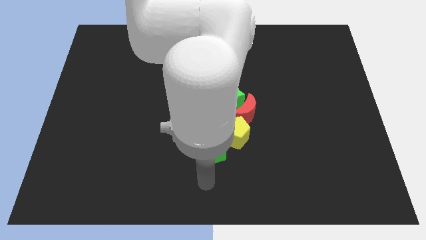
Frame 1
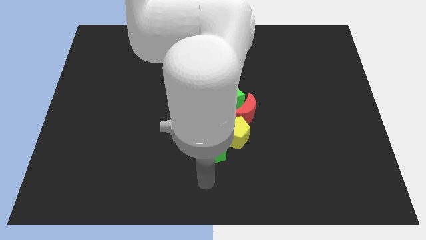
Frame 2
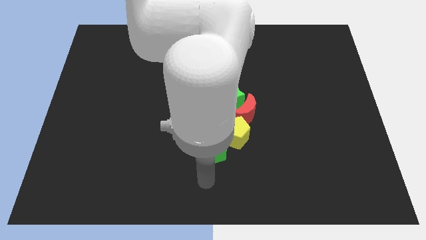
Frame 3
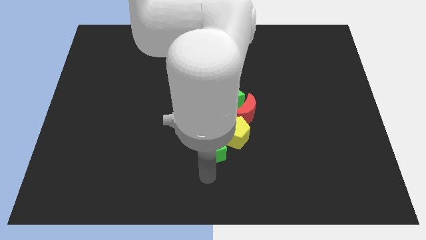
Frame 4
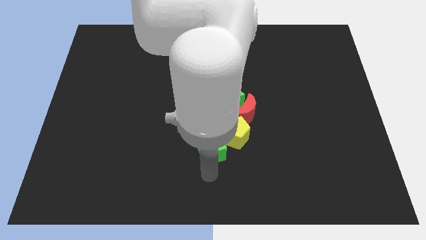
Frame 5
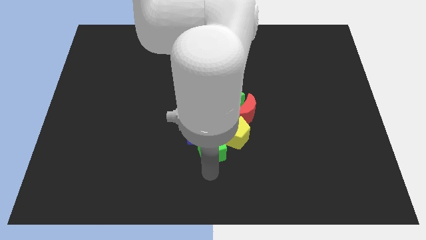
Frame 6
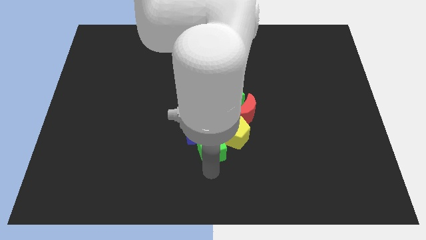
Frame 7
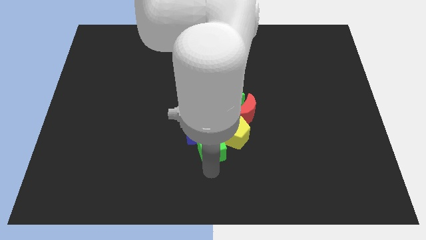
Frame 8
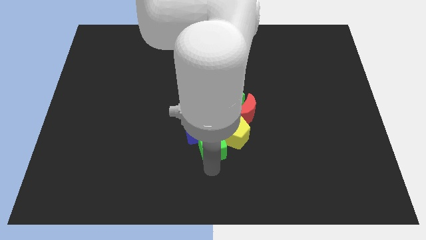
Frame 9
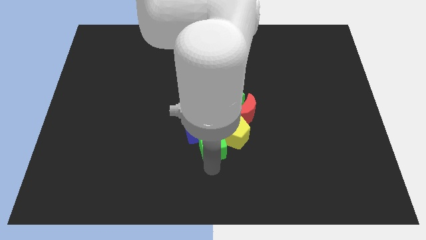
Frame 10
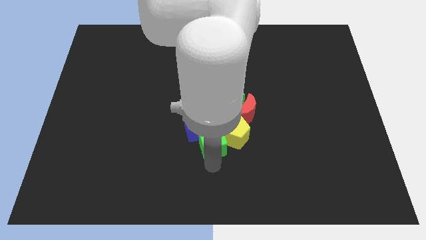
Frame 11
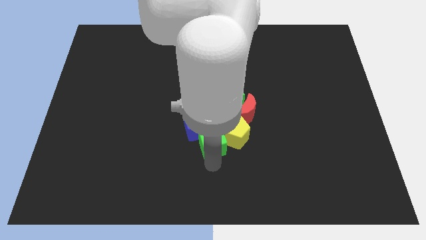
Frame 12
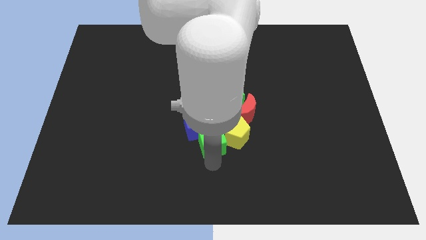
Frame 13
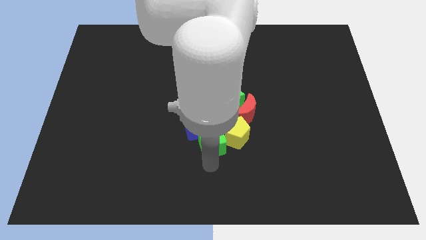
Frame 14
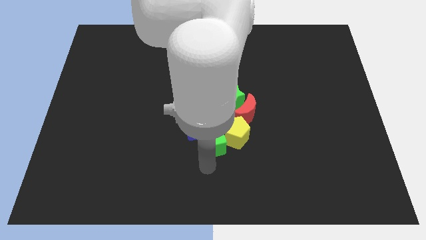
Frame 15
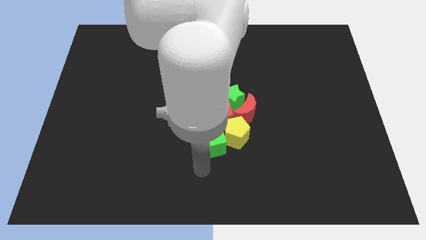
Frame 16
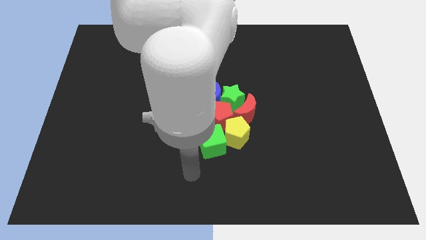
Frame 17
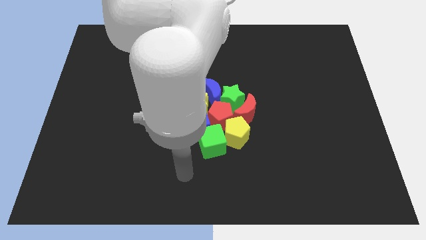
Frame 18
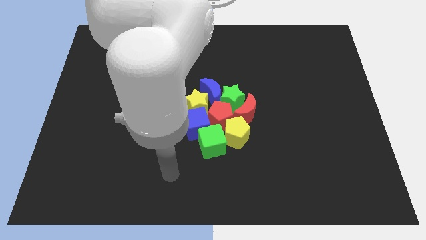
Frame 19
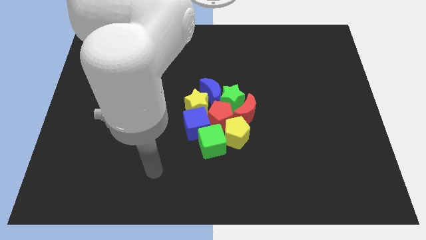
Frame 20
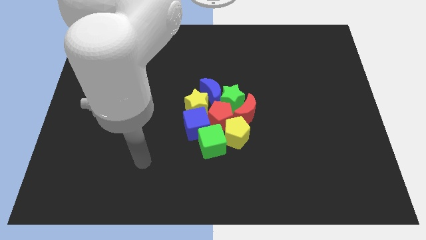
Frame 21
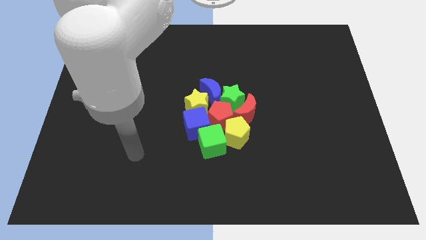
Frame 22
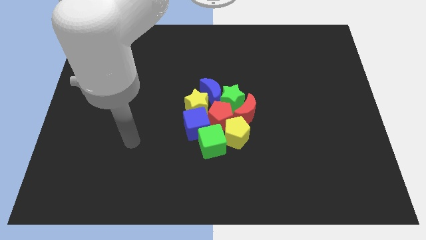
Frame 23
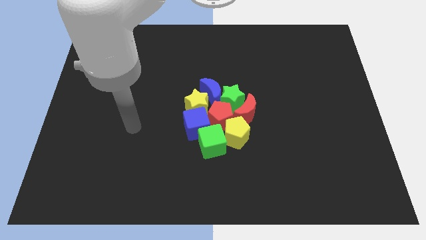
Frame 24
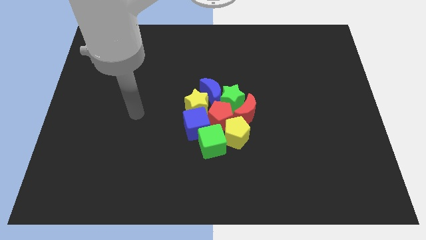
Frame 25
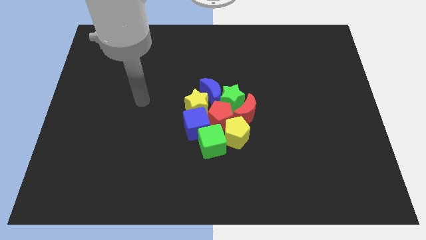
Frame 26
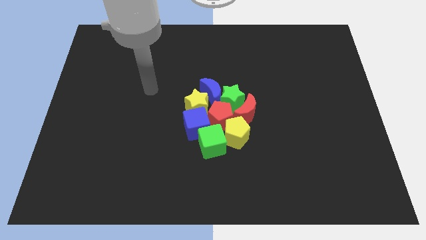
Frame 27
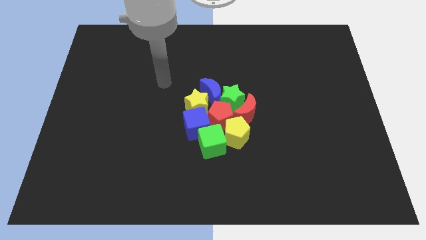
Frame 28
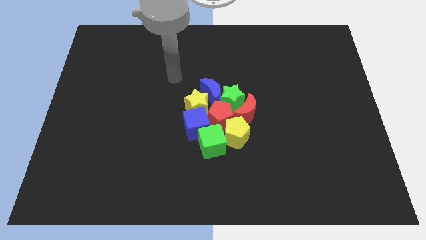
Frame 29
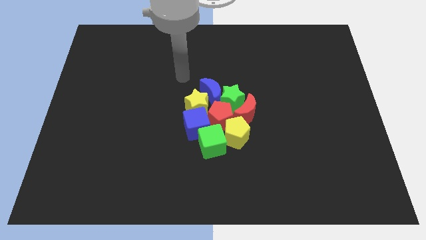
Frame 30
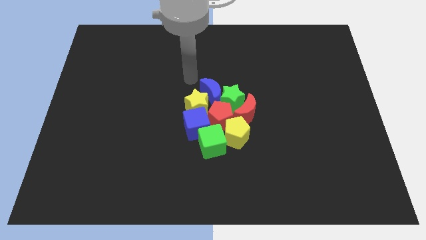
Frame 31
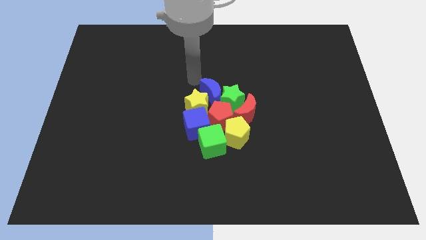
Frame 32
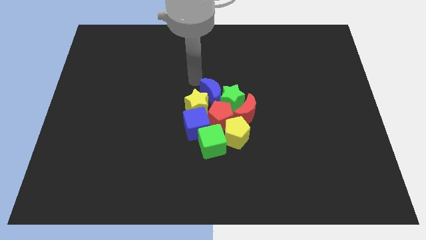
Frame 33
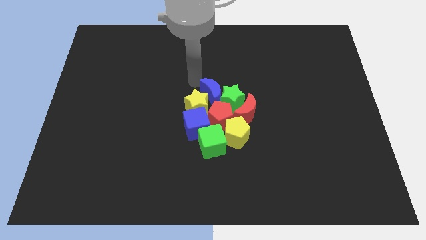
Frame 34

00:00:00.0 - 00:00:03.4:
push the green cube into the red pentagon

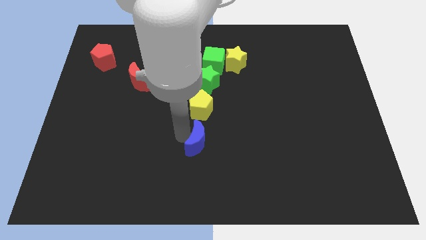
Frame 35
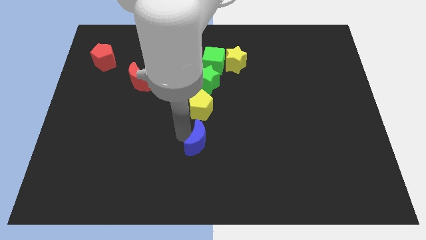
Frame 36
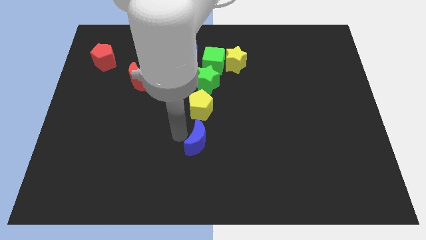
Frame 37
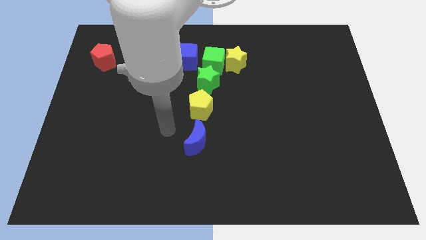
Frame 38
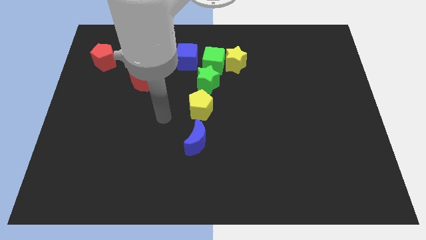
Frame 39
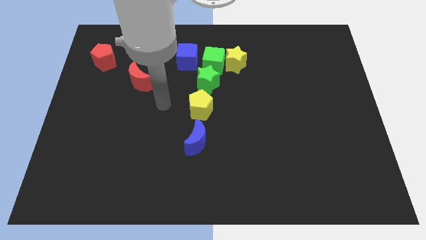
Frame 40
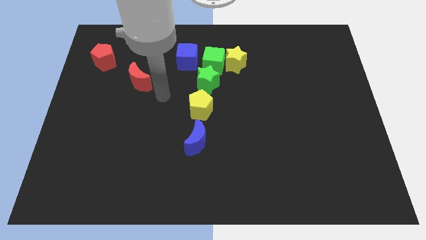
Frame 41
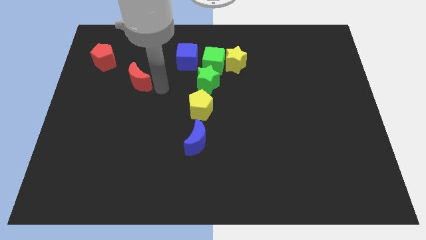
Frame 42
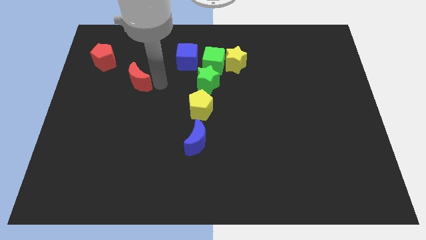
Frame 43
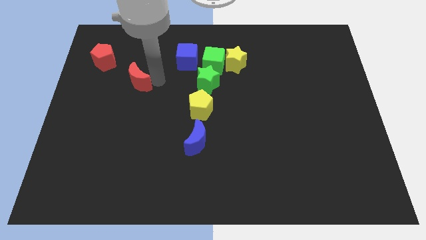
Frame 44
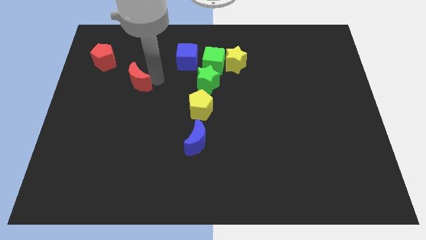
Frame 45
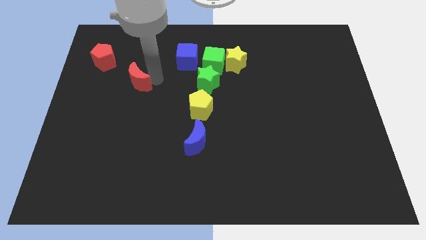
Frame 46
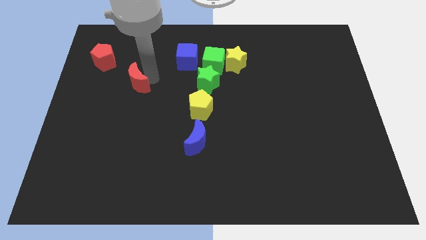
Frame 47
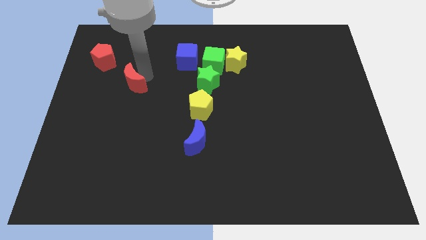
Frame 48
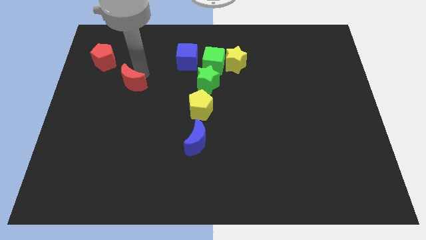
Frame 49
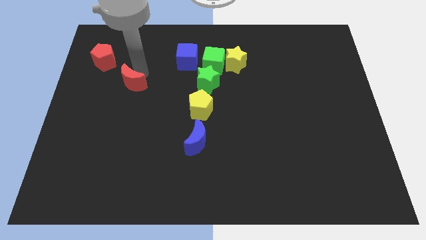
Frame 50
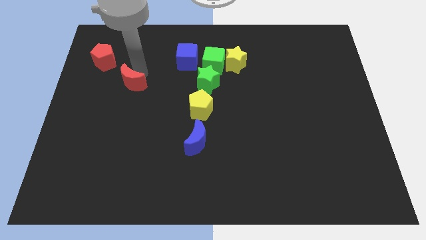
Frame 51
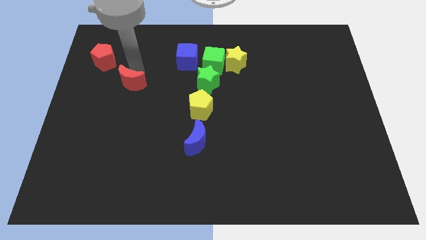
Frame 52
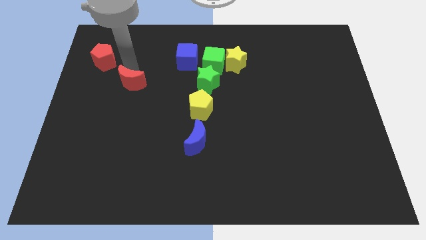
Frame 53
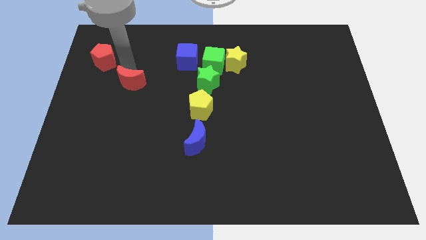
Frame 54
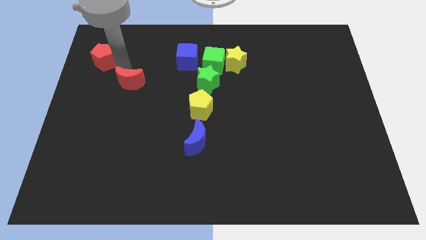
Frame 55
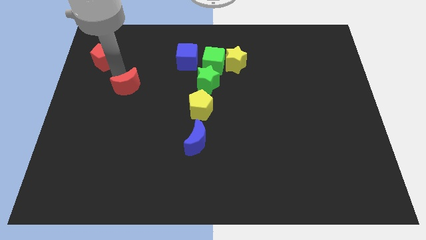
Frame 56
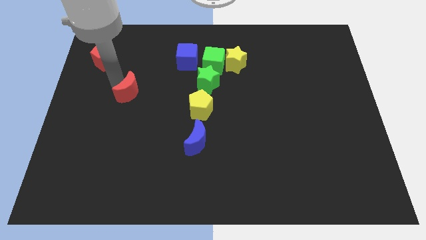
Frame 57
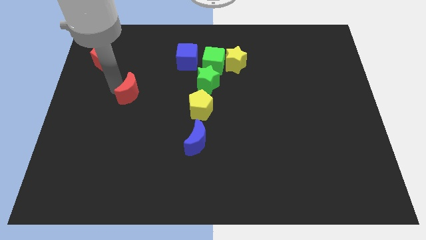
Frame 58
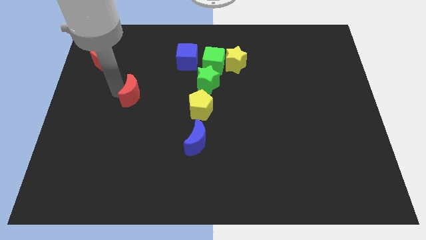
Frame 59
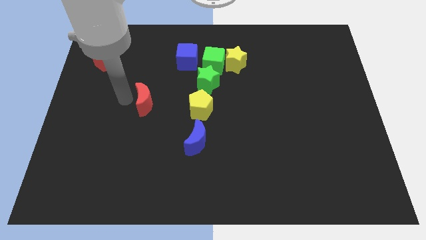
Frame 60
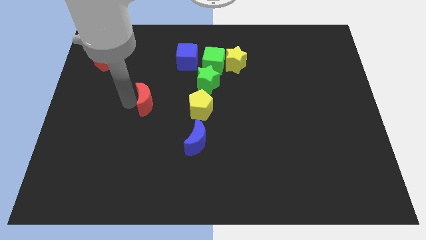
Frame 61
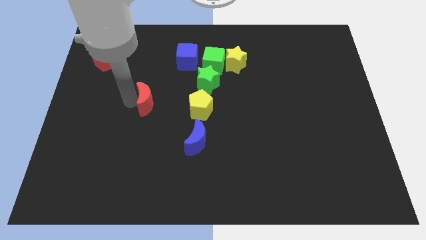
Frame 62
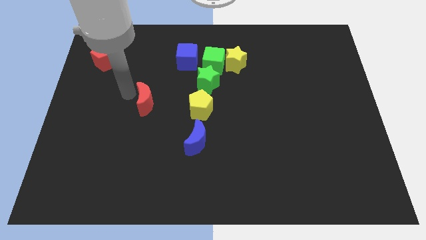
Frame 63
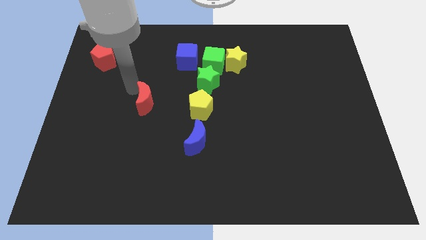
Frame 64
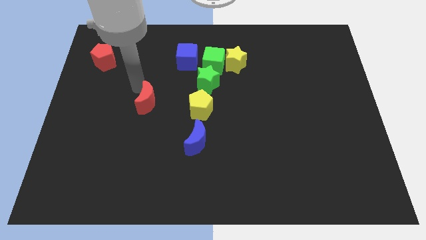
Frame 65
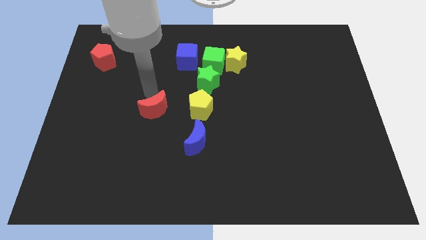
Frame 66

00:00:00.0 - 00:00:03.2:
push the red crescent horizontal to yellow pentagon

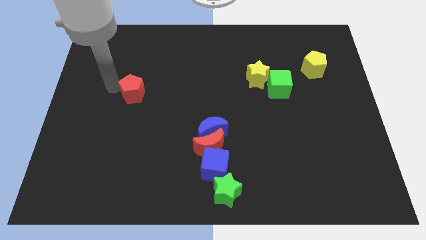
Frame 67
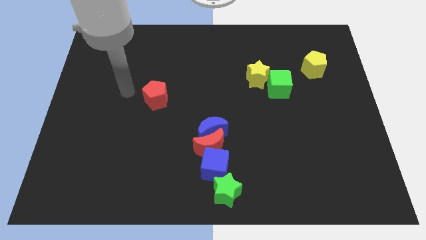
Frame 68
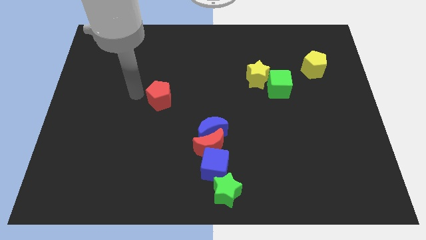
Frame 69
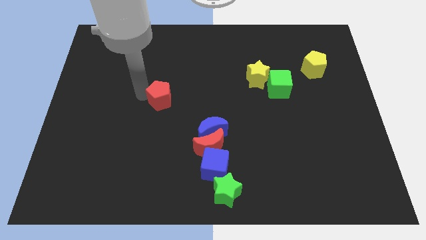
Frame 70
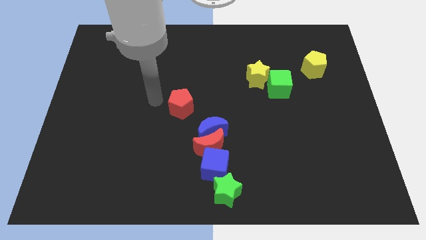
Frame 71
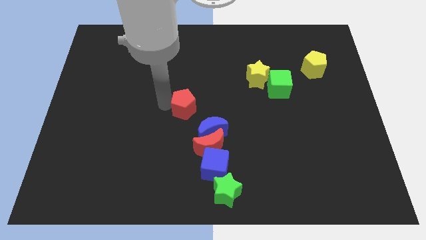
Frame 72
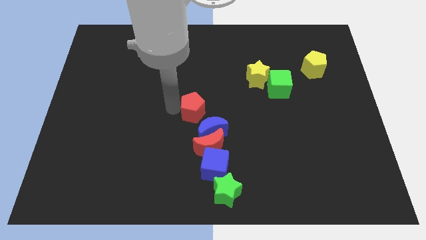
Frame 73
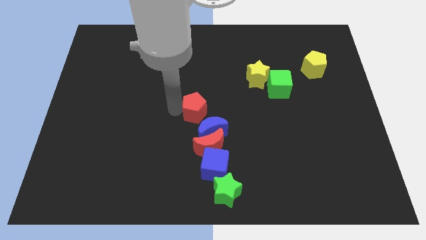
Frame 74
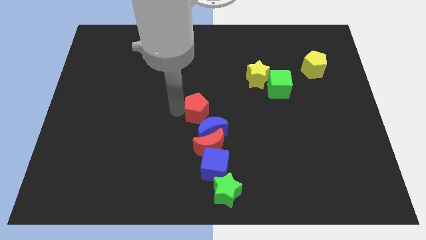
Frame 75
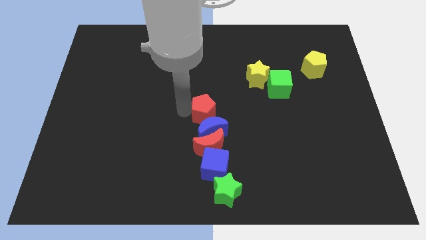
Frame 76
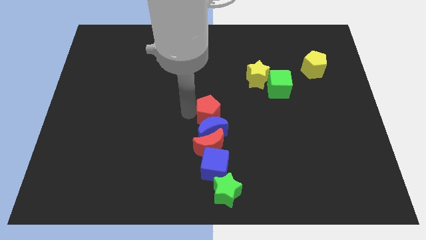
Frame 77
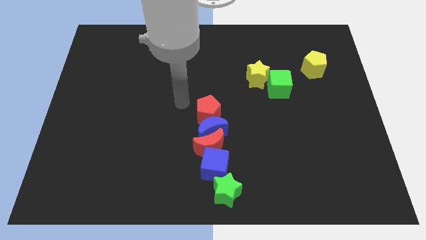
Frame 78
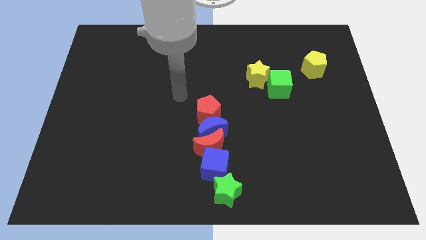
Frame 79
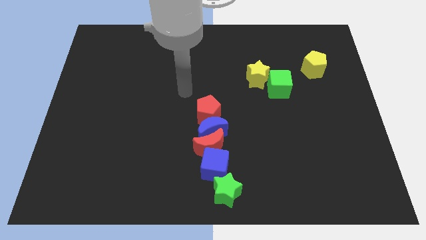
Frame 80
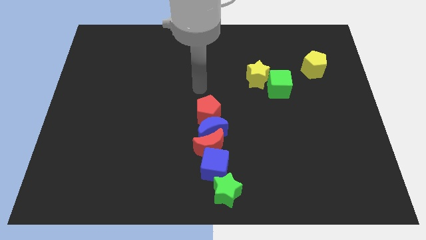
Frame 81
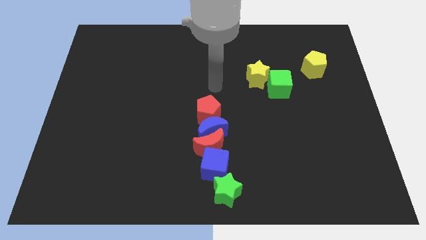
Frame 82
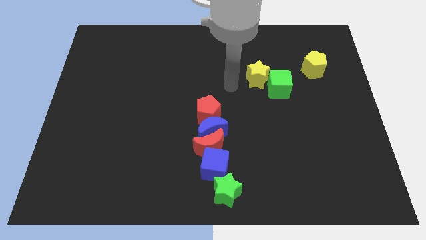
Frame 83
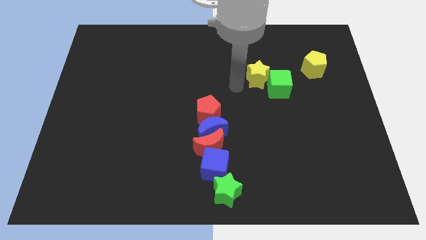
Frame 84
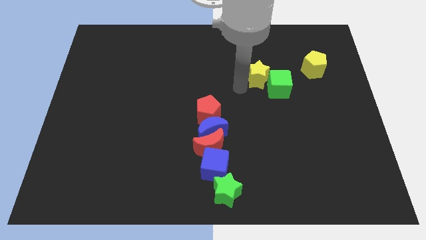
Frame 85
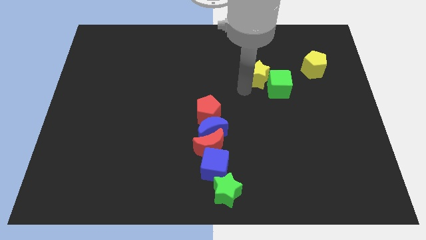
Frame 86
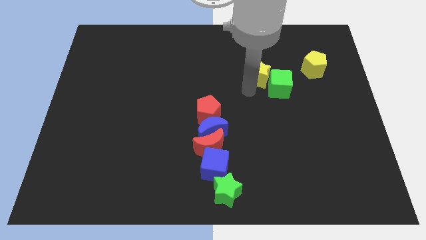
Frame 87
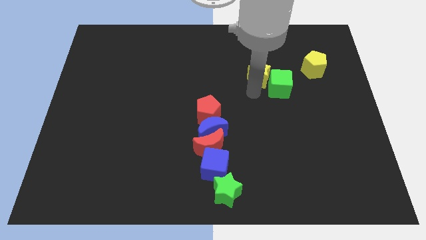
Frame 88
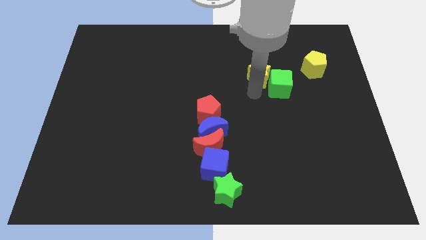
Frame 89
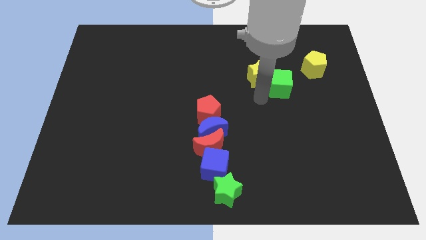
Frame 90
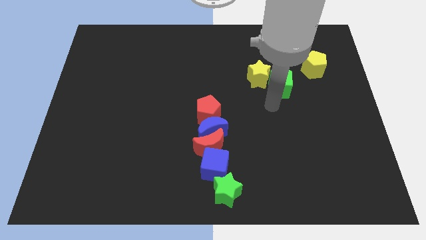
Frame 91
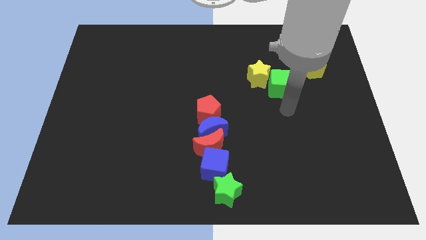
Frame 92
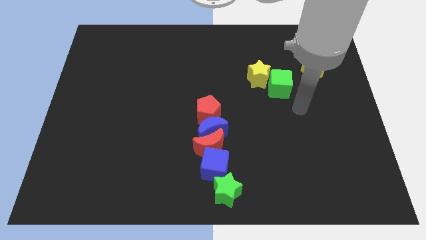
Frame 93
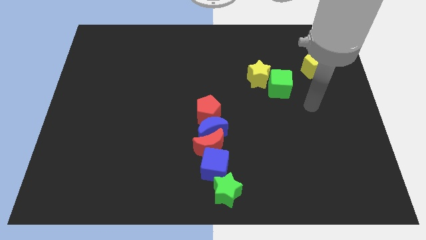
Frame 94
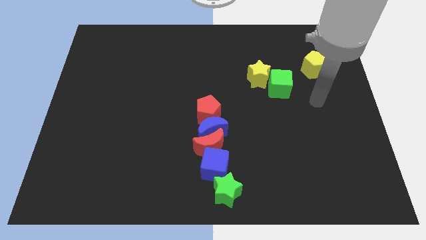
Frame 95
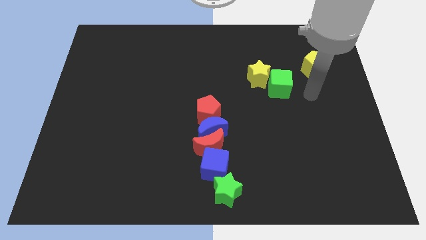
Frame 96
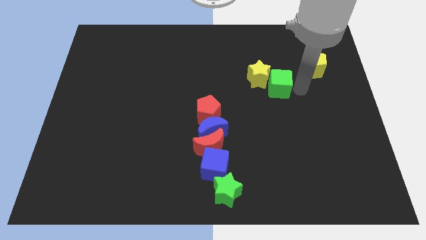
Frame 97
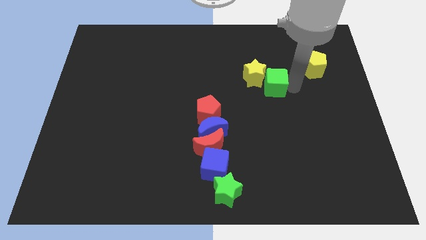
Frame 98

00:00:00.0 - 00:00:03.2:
move the red pentagon to the top of the blue crescent
